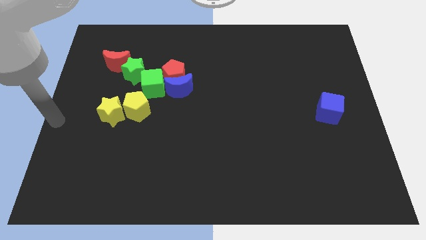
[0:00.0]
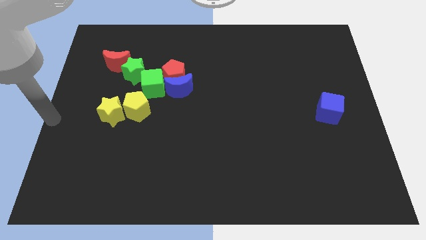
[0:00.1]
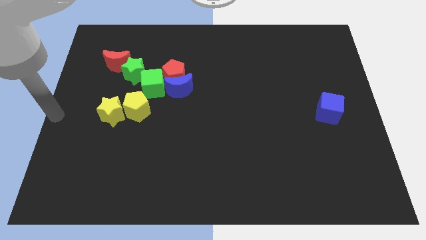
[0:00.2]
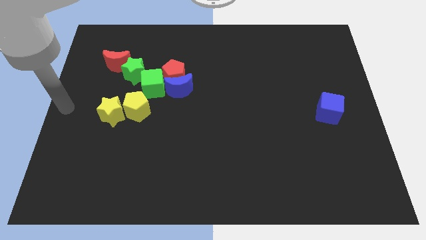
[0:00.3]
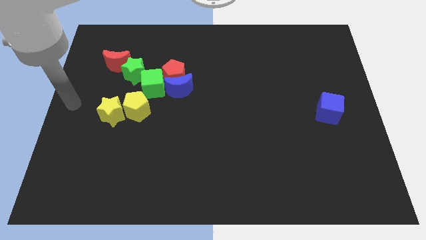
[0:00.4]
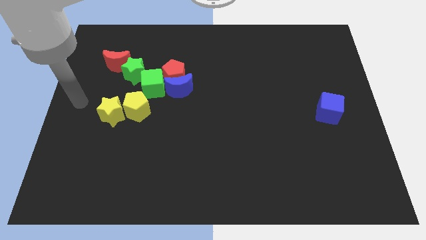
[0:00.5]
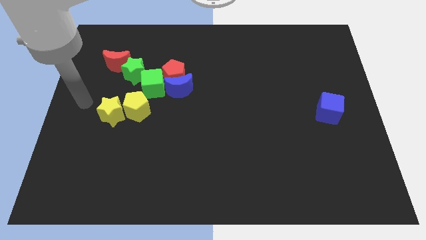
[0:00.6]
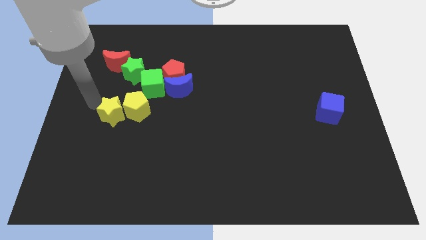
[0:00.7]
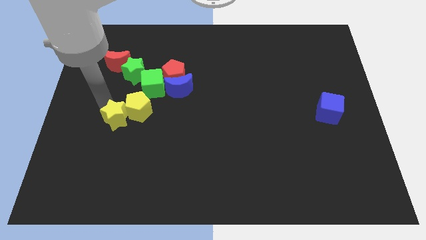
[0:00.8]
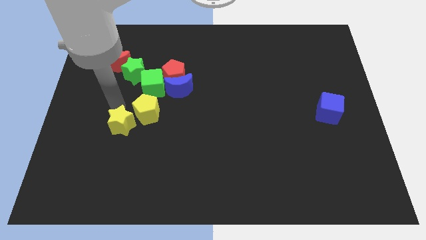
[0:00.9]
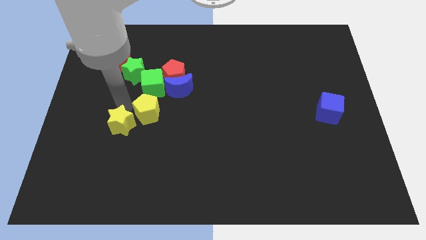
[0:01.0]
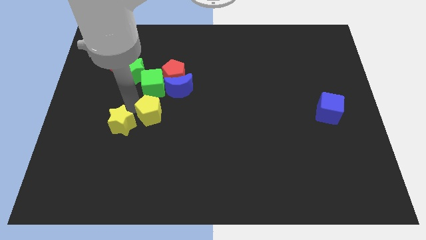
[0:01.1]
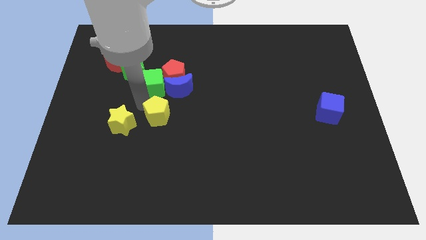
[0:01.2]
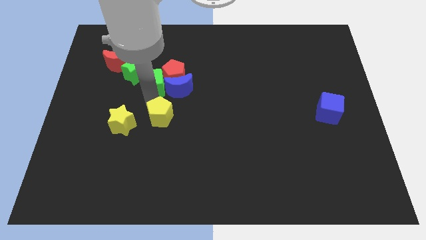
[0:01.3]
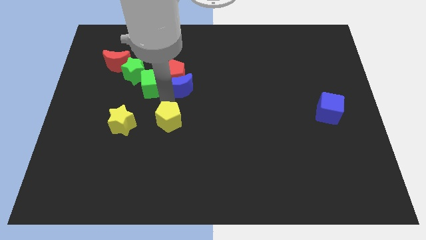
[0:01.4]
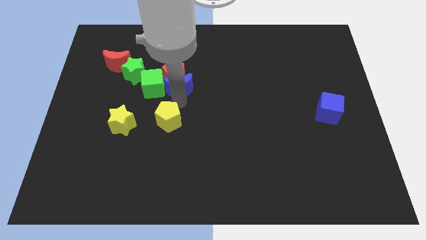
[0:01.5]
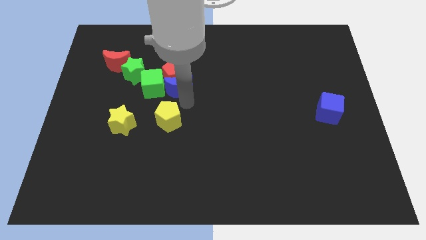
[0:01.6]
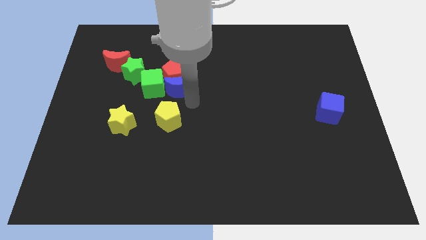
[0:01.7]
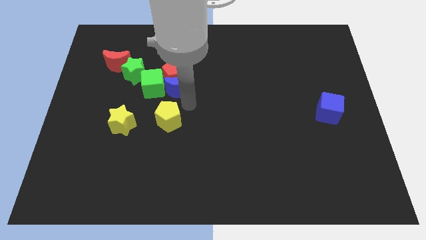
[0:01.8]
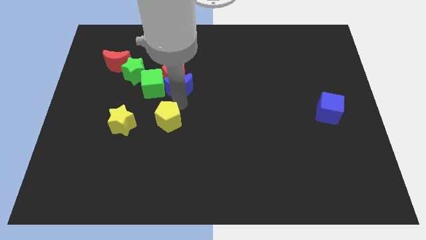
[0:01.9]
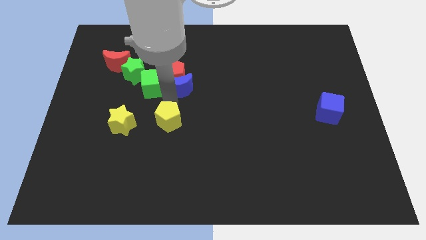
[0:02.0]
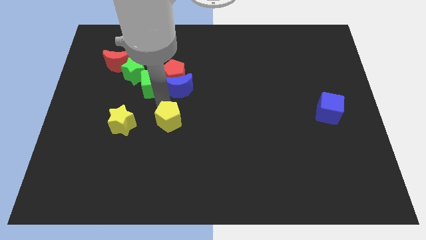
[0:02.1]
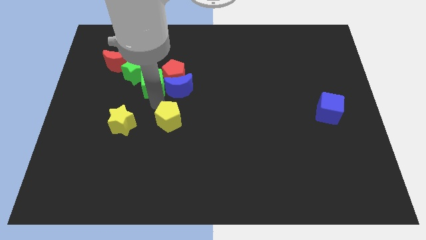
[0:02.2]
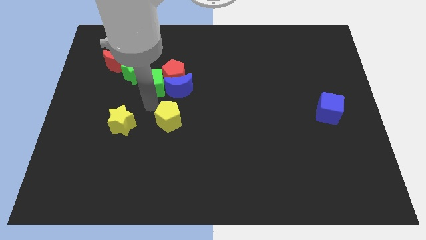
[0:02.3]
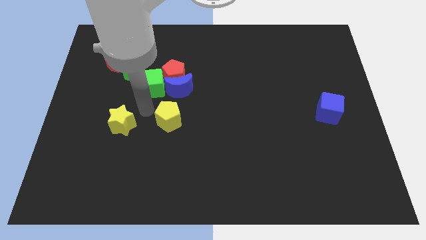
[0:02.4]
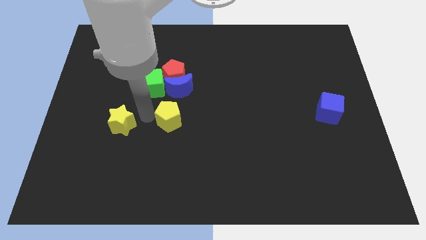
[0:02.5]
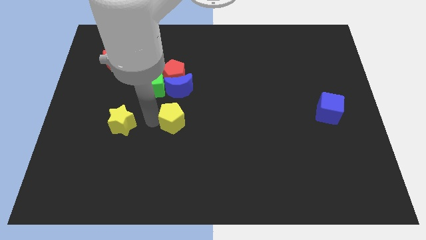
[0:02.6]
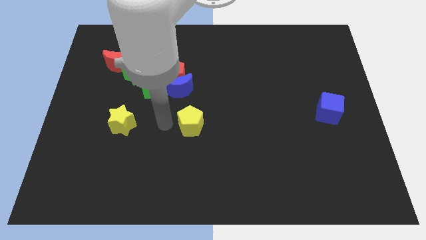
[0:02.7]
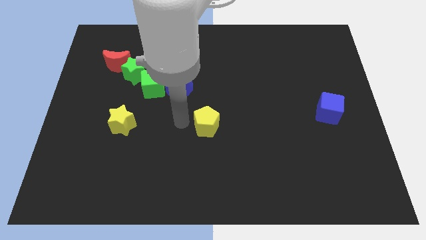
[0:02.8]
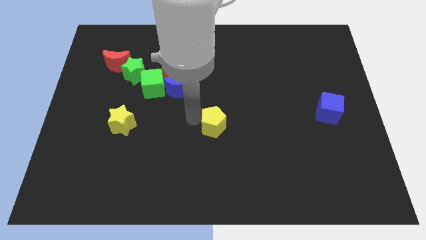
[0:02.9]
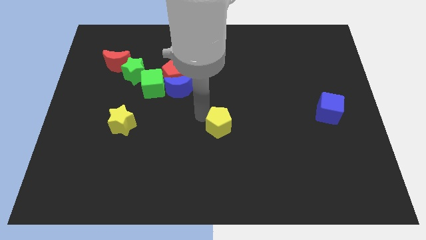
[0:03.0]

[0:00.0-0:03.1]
push yellow pentagon parallel to the irght of the yellow star

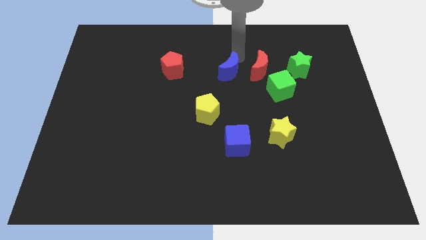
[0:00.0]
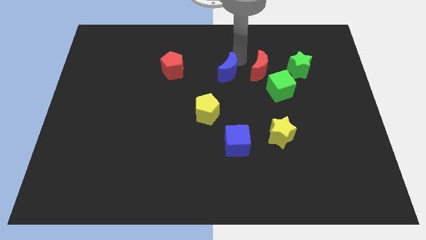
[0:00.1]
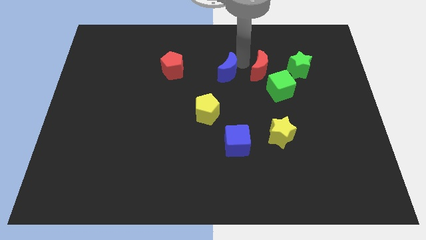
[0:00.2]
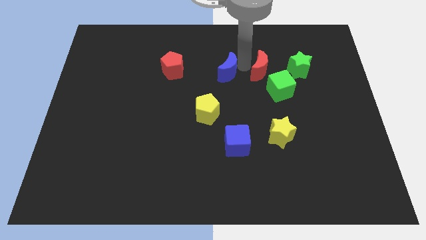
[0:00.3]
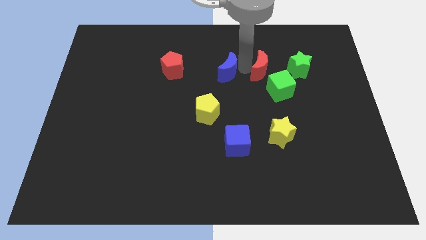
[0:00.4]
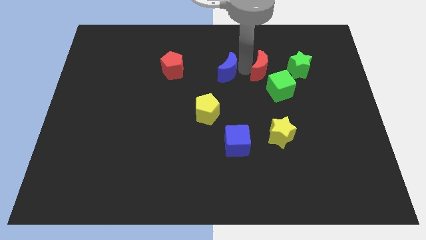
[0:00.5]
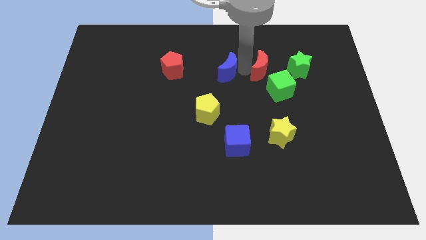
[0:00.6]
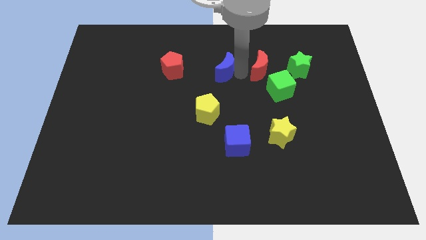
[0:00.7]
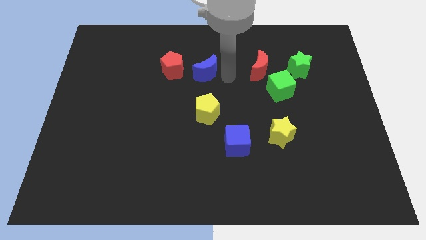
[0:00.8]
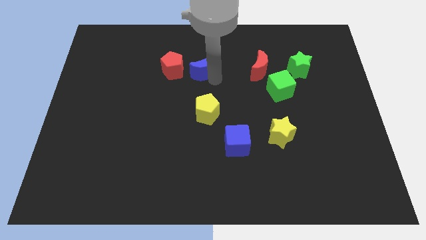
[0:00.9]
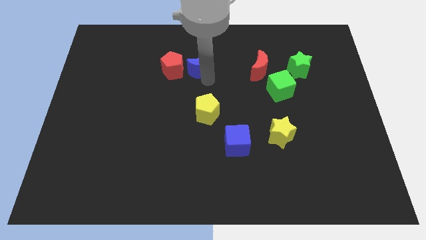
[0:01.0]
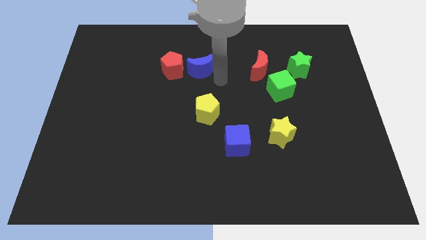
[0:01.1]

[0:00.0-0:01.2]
push the blue moon to the right side of the red pentagon

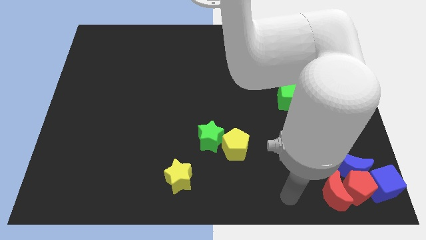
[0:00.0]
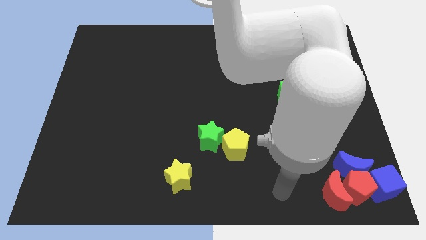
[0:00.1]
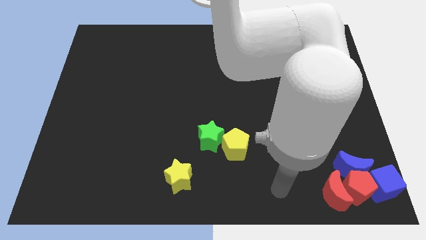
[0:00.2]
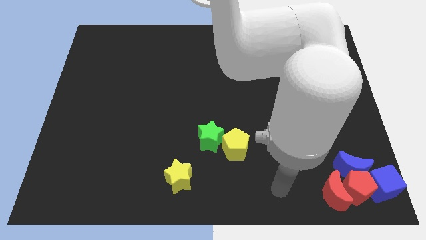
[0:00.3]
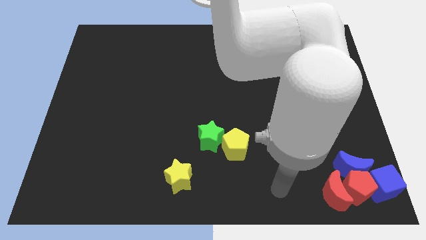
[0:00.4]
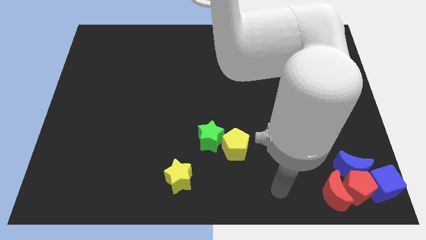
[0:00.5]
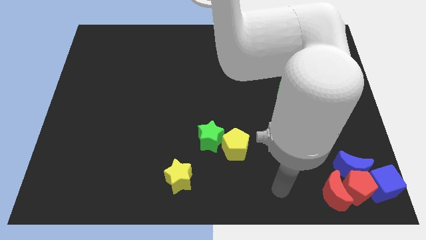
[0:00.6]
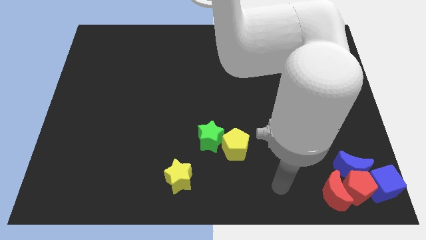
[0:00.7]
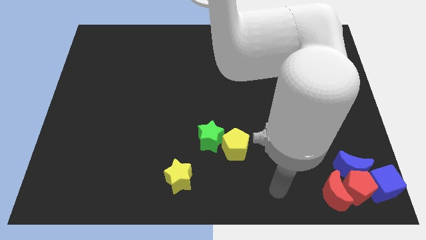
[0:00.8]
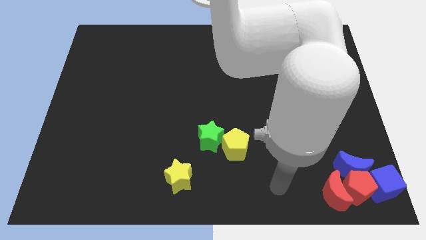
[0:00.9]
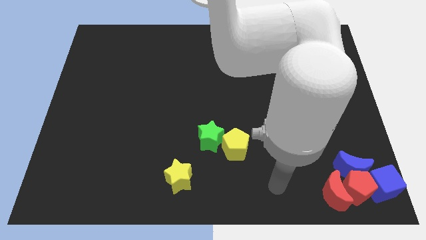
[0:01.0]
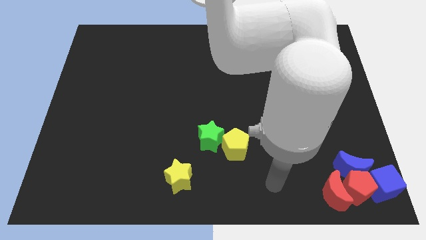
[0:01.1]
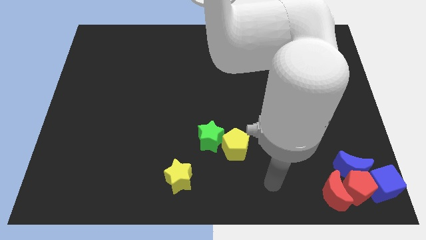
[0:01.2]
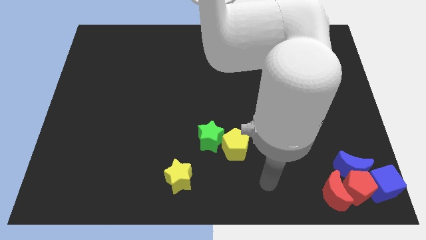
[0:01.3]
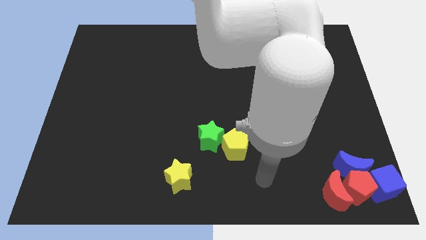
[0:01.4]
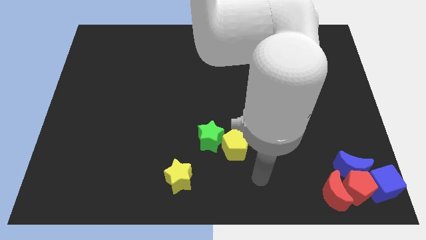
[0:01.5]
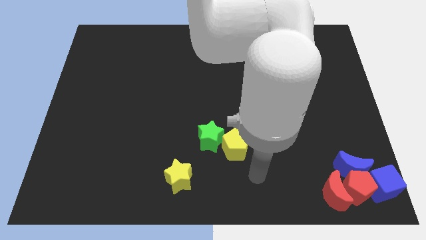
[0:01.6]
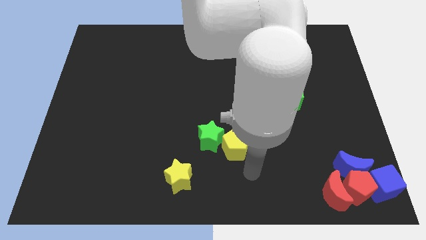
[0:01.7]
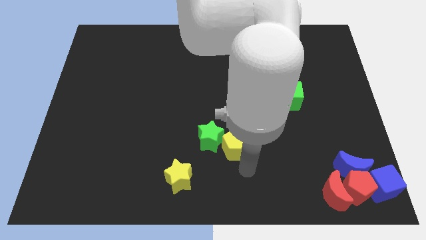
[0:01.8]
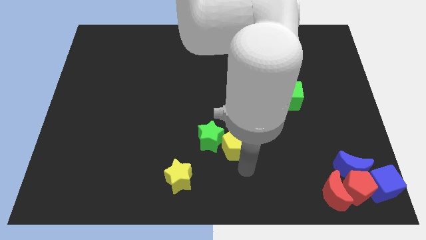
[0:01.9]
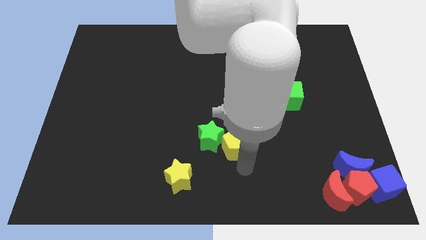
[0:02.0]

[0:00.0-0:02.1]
move the arm away from the red crescent

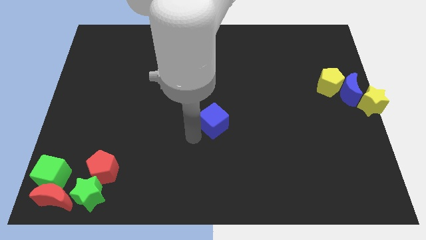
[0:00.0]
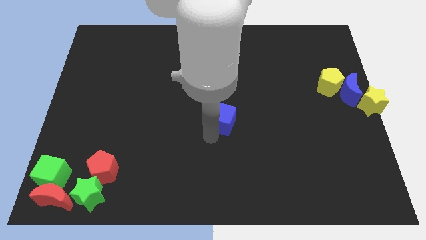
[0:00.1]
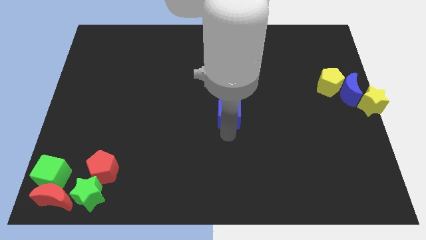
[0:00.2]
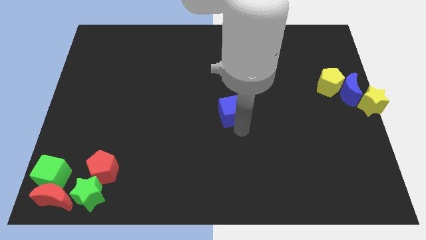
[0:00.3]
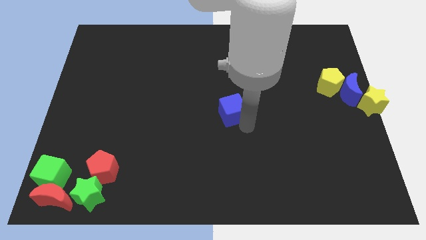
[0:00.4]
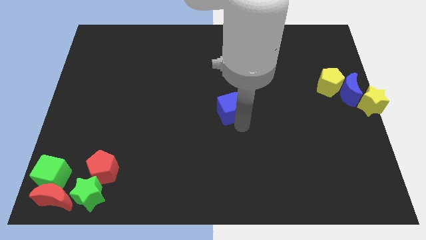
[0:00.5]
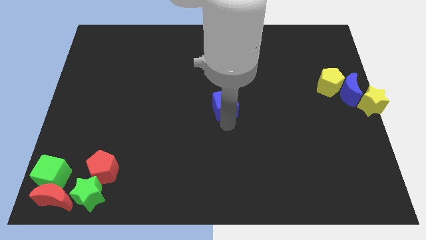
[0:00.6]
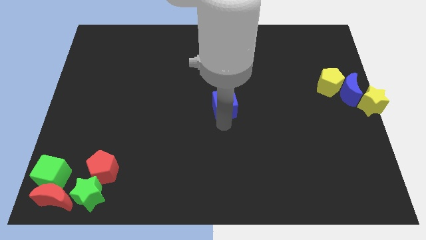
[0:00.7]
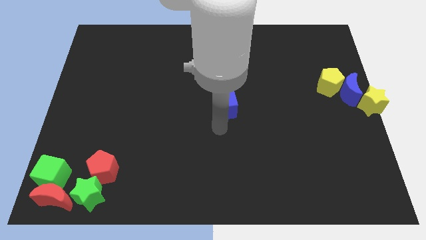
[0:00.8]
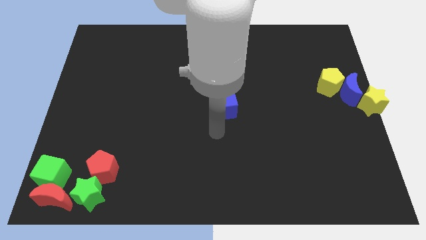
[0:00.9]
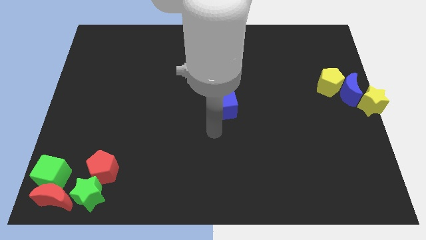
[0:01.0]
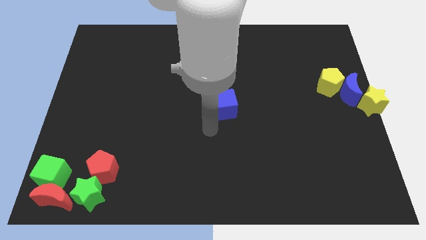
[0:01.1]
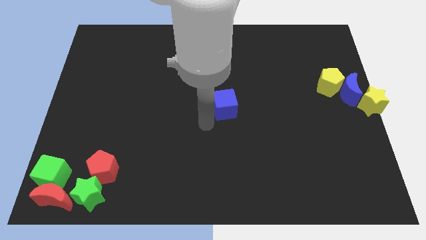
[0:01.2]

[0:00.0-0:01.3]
move the blue cube to the top

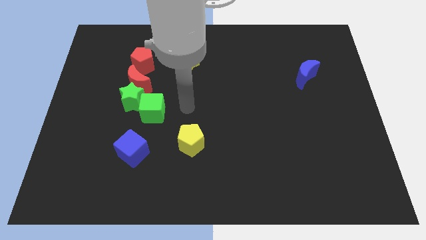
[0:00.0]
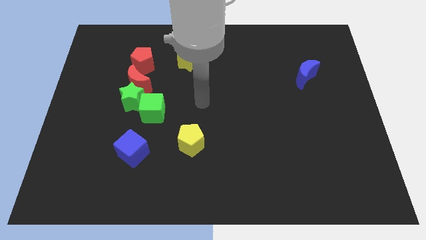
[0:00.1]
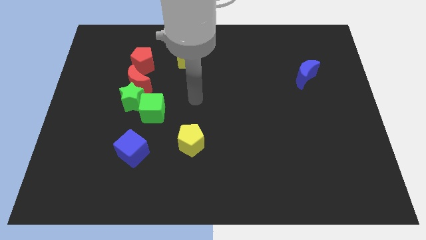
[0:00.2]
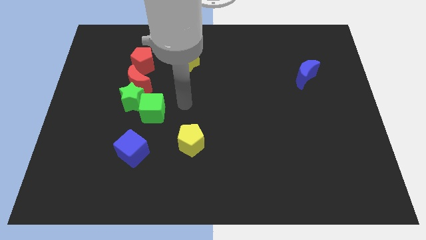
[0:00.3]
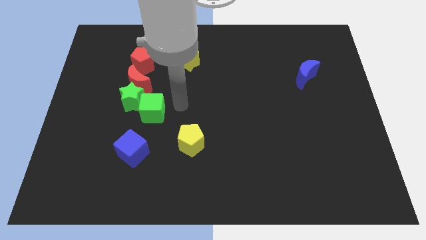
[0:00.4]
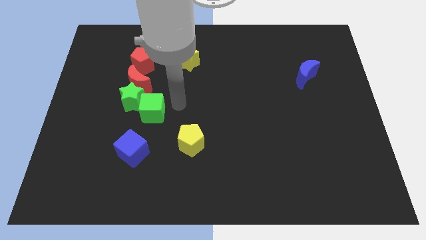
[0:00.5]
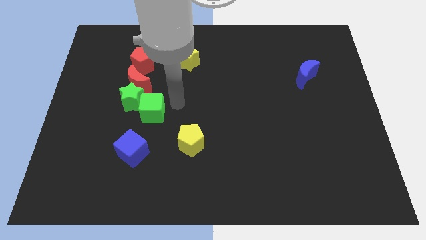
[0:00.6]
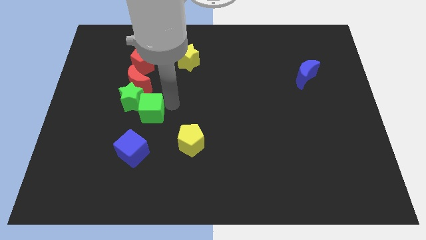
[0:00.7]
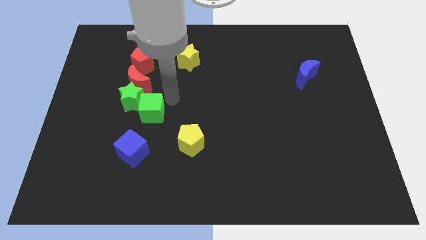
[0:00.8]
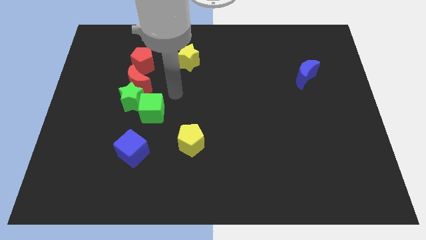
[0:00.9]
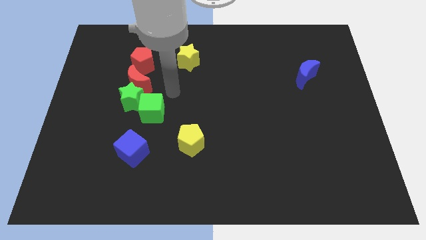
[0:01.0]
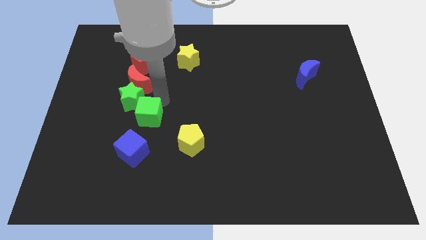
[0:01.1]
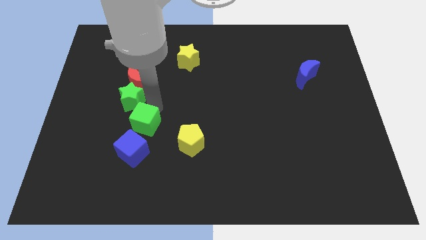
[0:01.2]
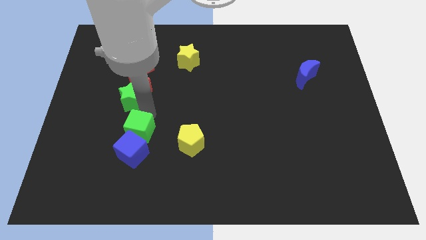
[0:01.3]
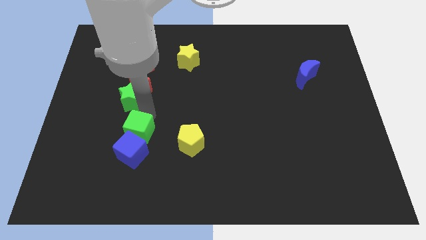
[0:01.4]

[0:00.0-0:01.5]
place green cube above blue cube
